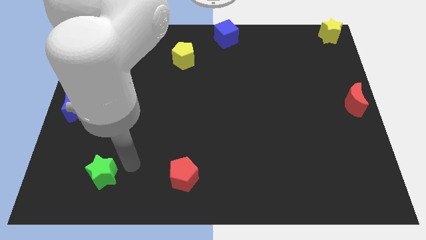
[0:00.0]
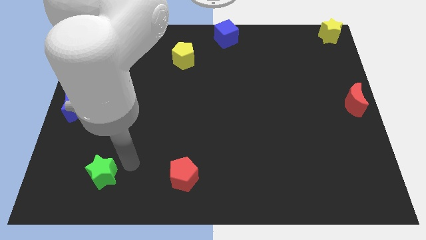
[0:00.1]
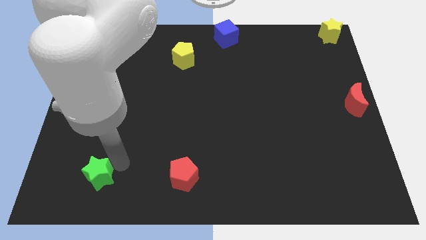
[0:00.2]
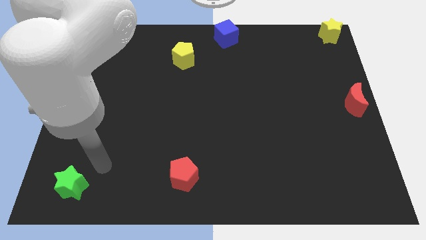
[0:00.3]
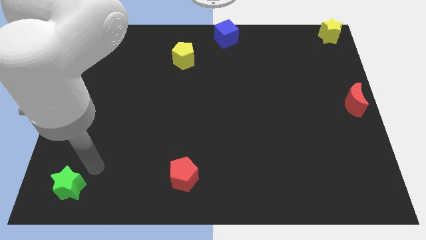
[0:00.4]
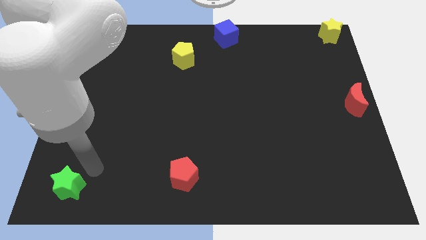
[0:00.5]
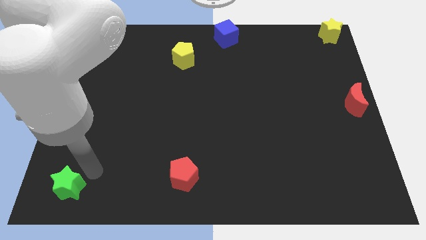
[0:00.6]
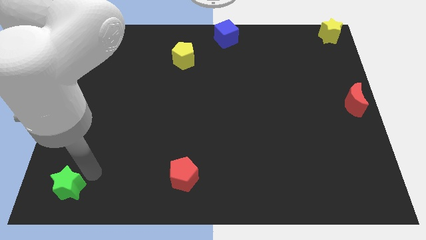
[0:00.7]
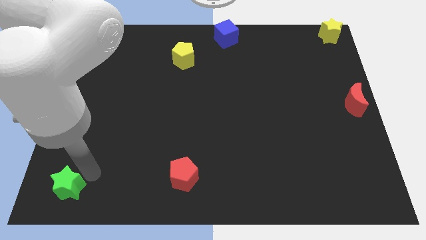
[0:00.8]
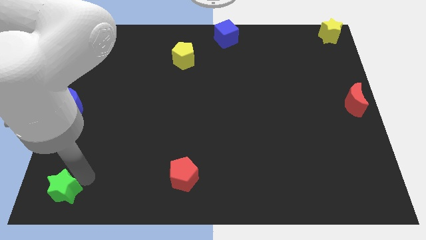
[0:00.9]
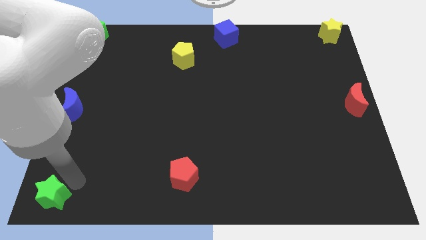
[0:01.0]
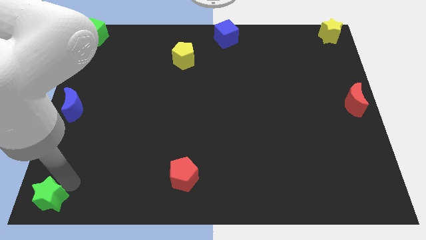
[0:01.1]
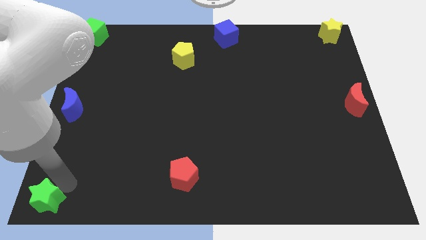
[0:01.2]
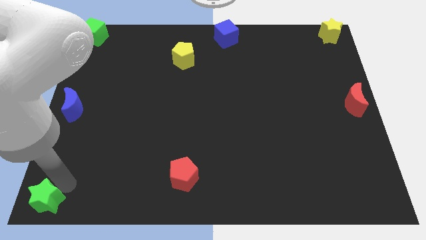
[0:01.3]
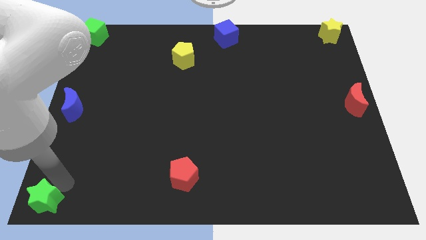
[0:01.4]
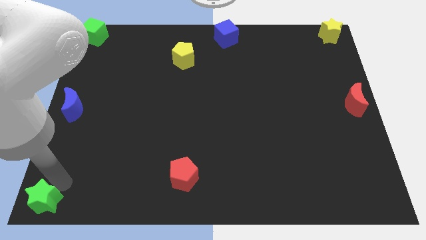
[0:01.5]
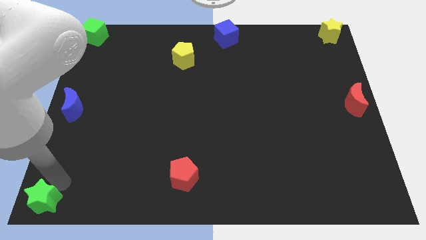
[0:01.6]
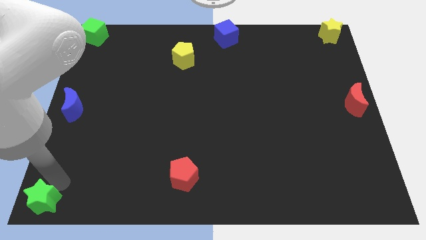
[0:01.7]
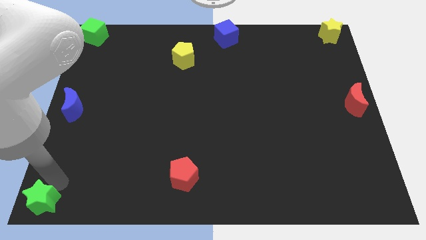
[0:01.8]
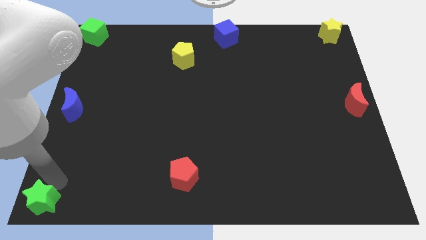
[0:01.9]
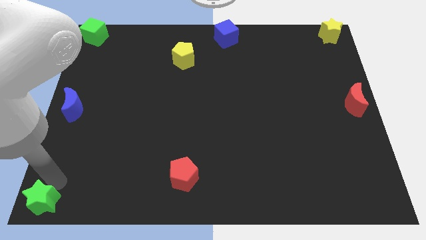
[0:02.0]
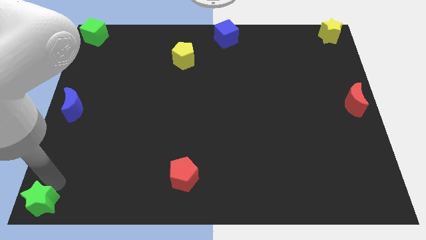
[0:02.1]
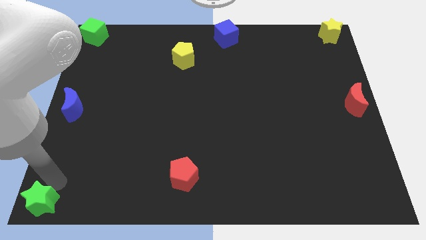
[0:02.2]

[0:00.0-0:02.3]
place the green star to the bottom left of the board

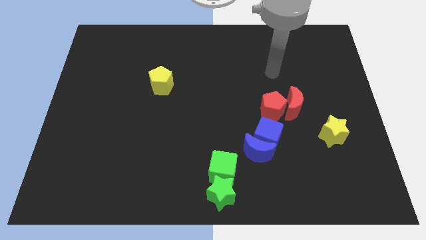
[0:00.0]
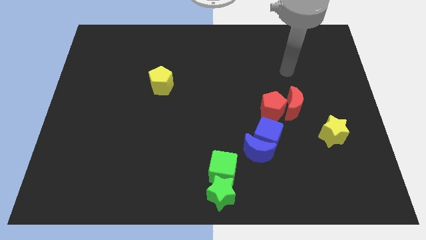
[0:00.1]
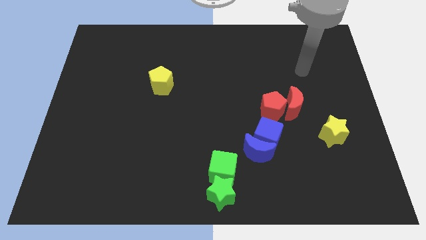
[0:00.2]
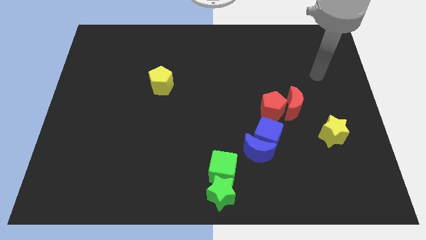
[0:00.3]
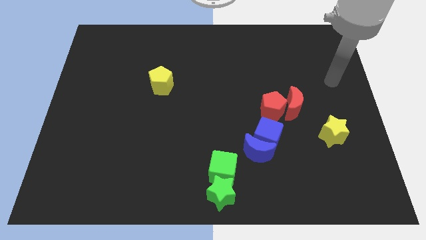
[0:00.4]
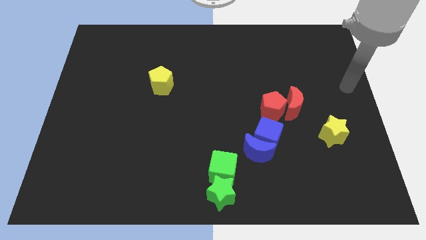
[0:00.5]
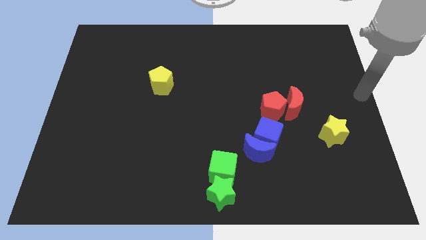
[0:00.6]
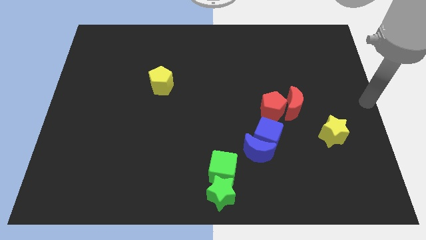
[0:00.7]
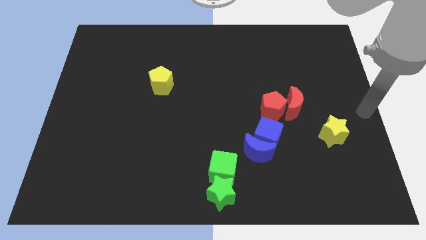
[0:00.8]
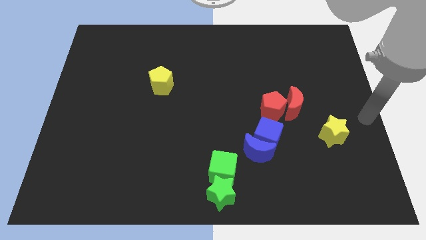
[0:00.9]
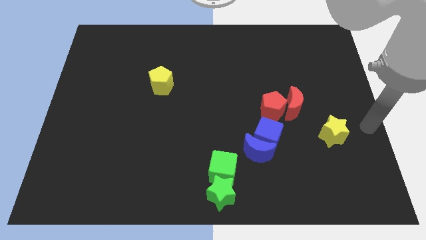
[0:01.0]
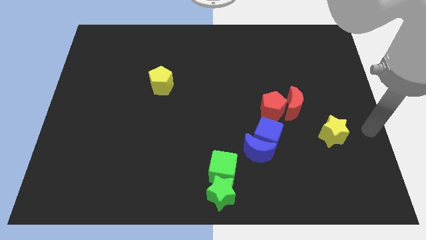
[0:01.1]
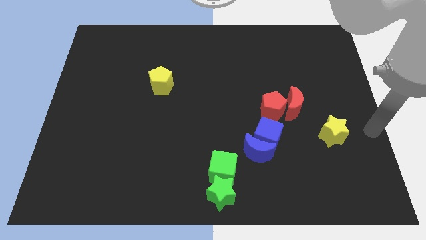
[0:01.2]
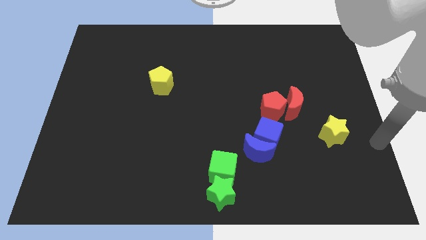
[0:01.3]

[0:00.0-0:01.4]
place your arm at the right side of the yellow star

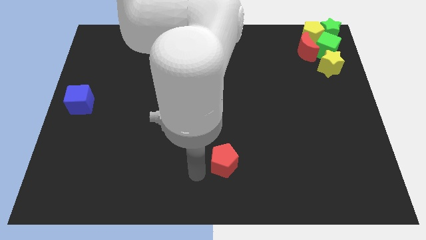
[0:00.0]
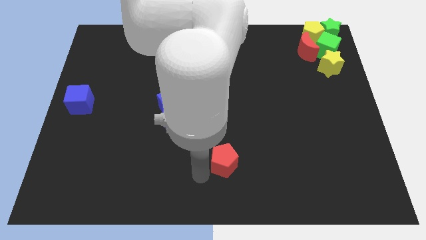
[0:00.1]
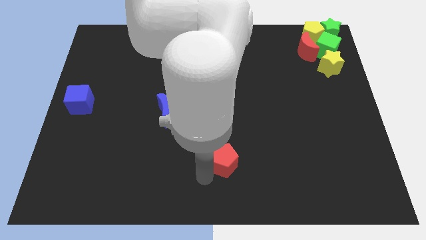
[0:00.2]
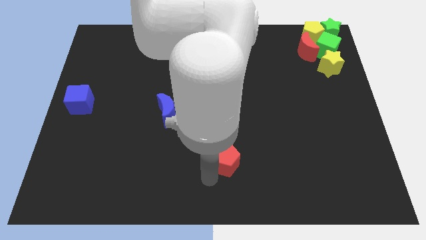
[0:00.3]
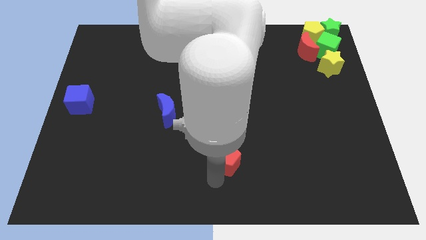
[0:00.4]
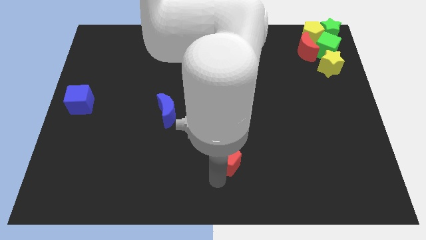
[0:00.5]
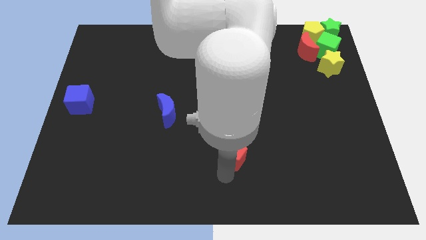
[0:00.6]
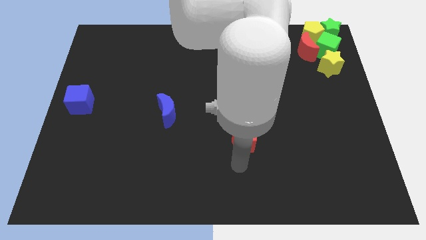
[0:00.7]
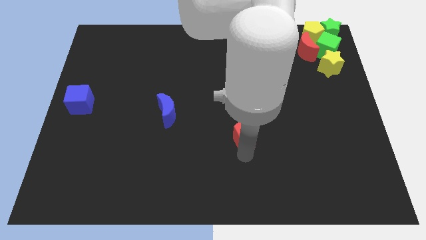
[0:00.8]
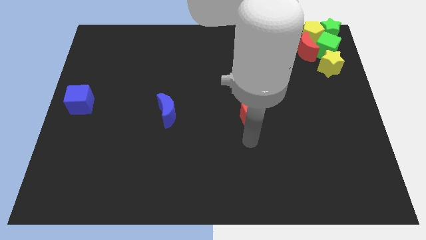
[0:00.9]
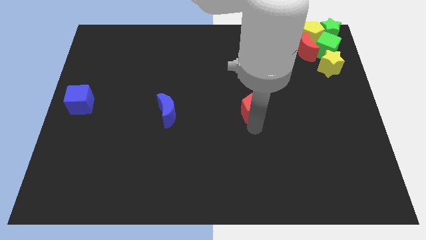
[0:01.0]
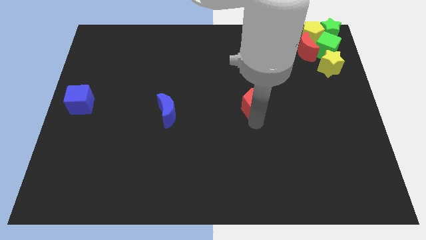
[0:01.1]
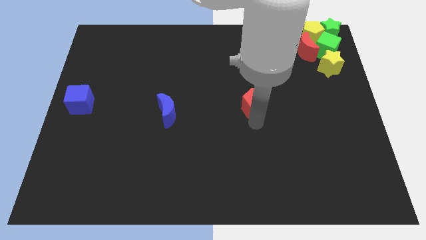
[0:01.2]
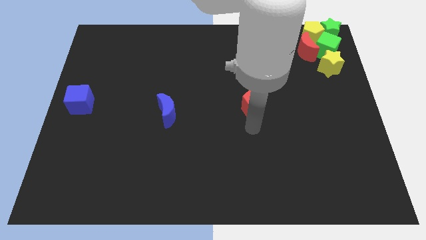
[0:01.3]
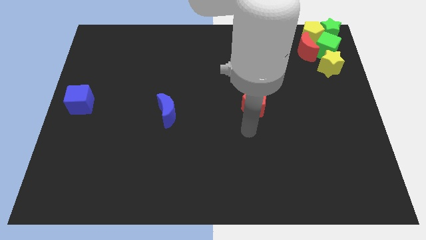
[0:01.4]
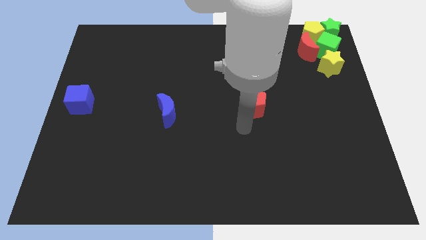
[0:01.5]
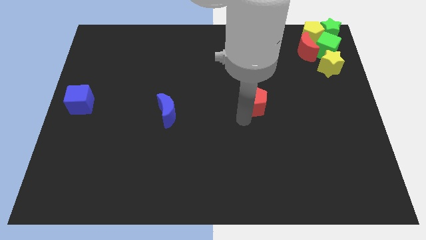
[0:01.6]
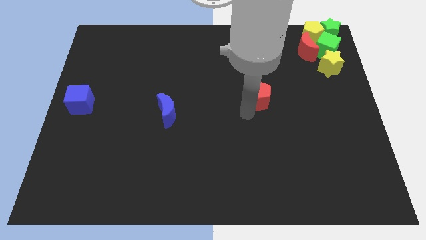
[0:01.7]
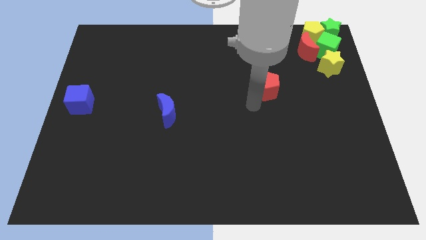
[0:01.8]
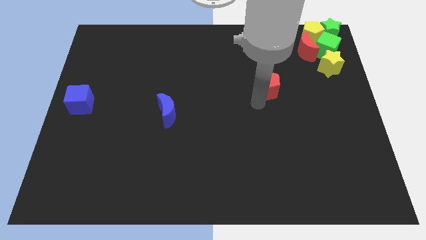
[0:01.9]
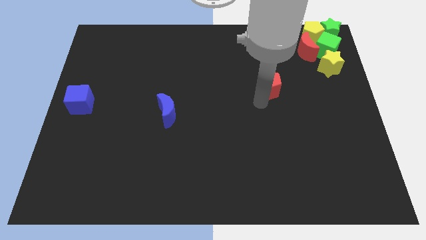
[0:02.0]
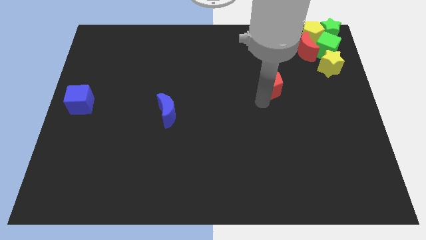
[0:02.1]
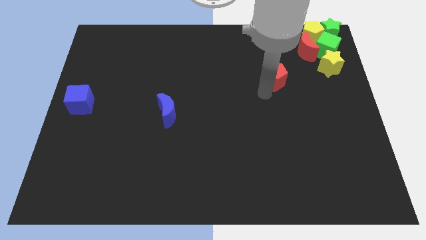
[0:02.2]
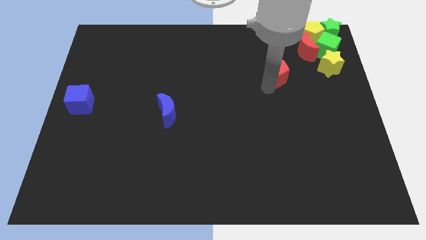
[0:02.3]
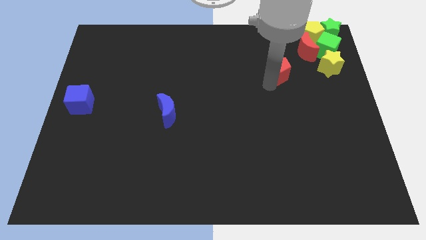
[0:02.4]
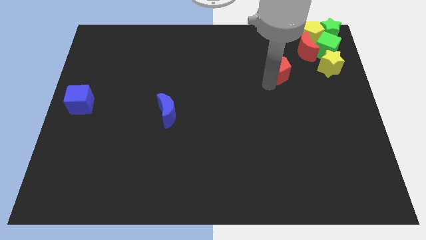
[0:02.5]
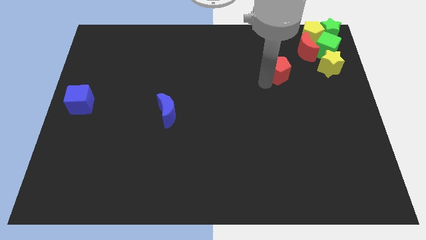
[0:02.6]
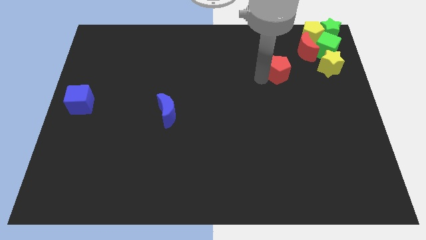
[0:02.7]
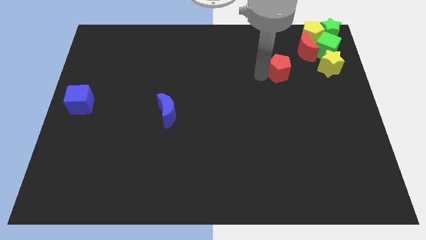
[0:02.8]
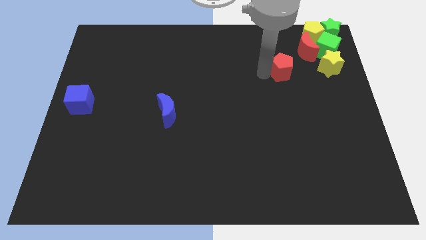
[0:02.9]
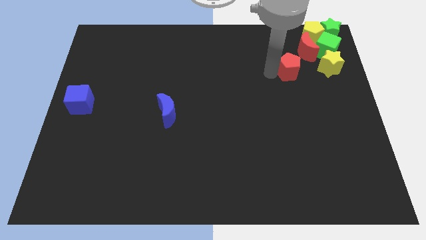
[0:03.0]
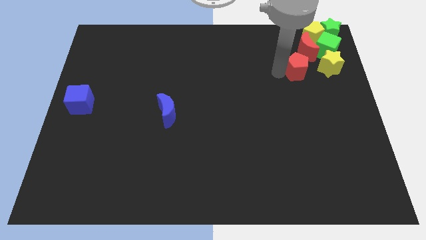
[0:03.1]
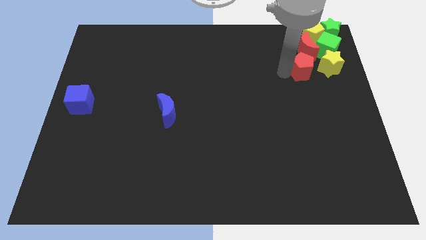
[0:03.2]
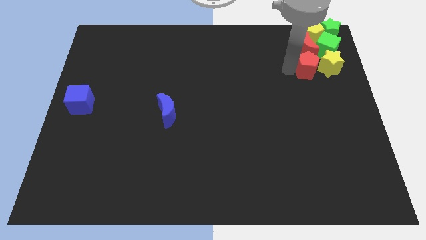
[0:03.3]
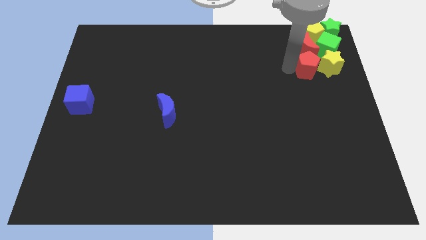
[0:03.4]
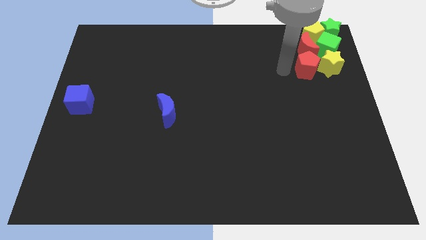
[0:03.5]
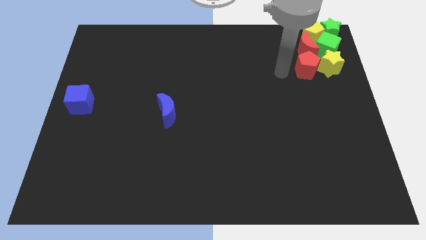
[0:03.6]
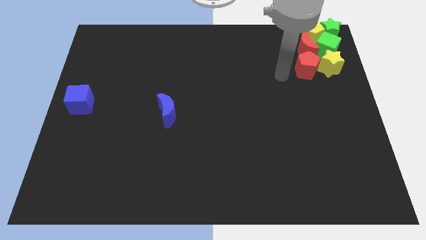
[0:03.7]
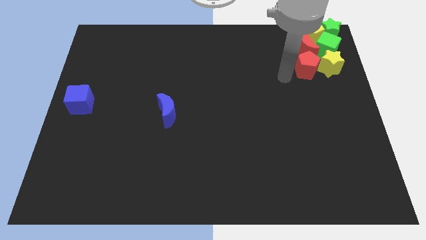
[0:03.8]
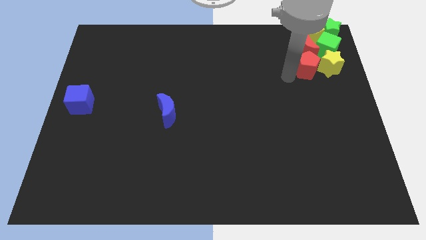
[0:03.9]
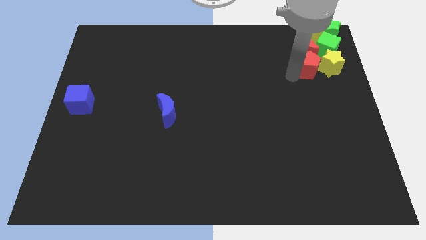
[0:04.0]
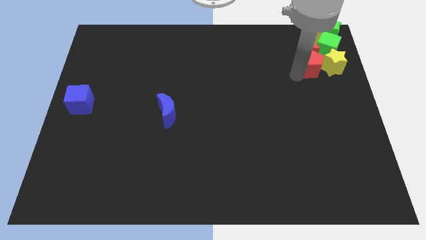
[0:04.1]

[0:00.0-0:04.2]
push the red pentagon into a group of blocks

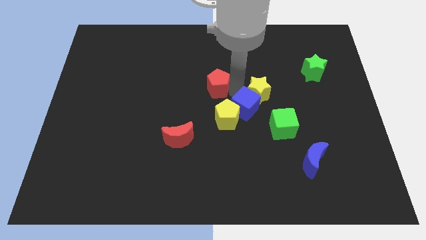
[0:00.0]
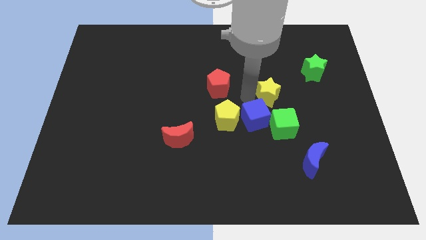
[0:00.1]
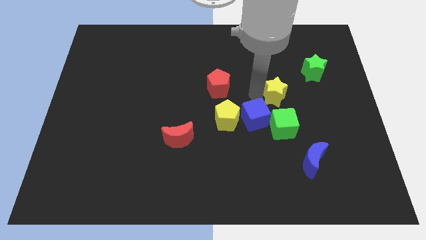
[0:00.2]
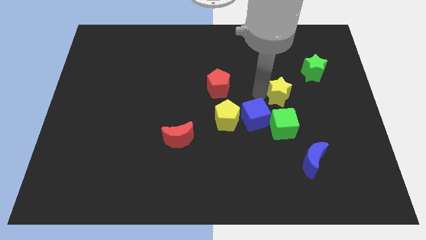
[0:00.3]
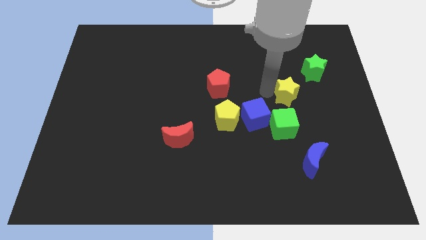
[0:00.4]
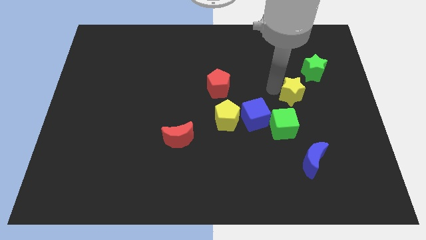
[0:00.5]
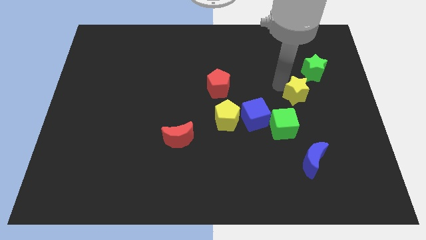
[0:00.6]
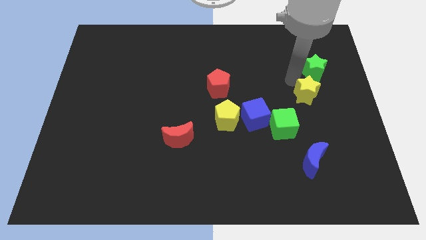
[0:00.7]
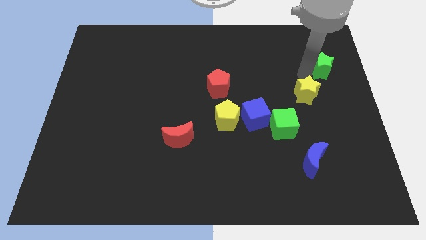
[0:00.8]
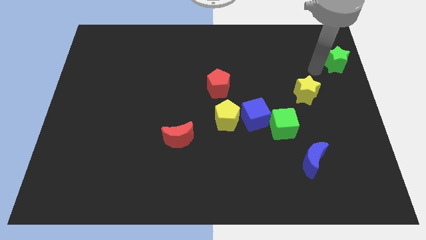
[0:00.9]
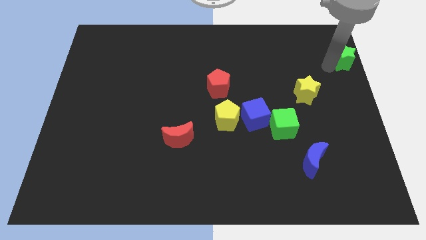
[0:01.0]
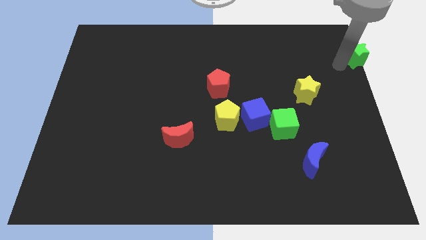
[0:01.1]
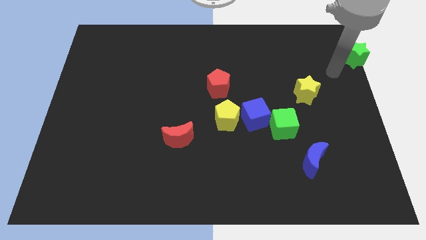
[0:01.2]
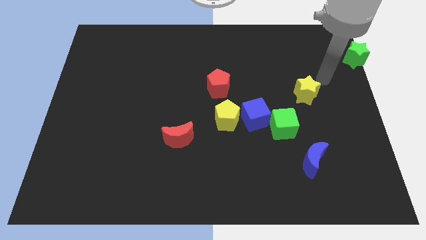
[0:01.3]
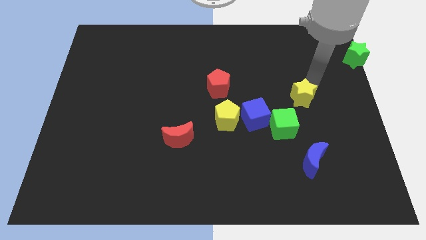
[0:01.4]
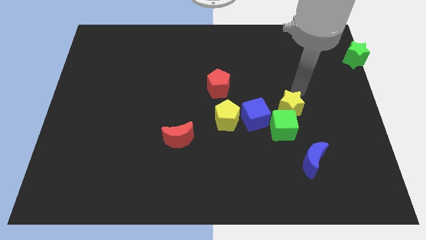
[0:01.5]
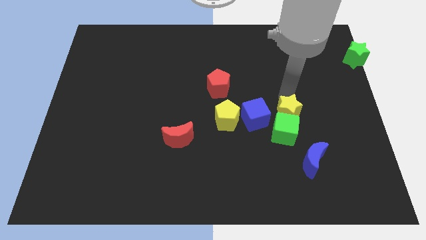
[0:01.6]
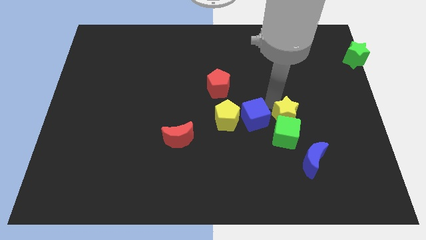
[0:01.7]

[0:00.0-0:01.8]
move the green star to the right side of the board
